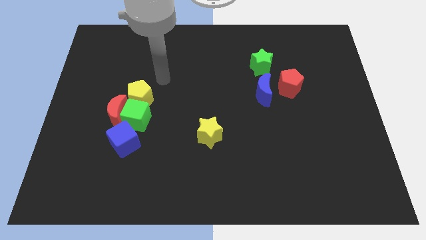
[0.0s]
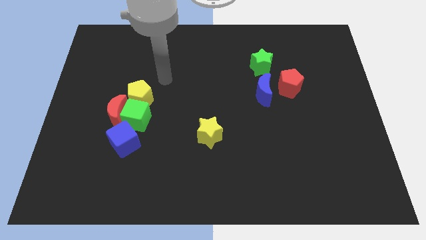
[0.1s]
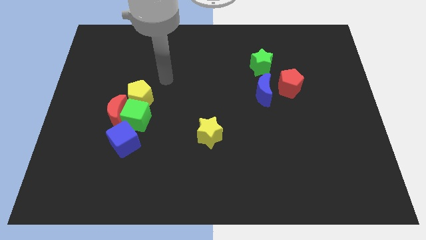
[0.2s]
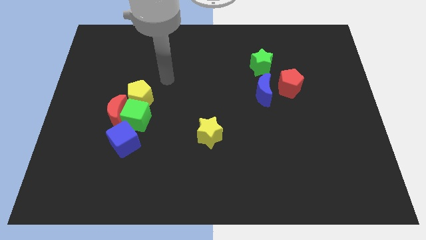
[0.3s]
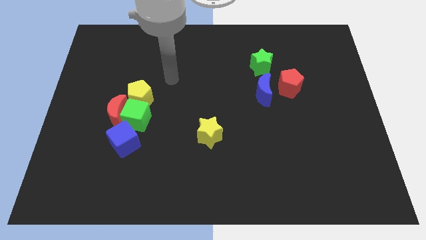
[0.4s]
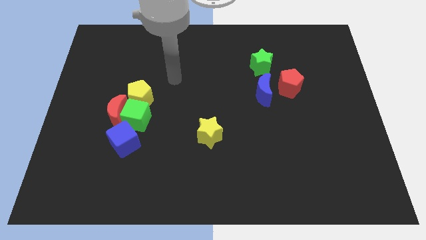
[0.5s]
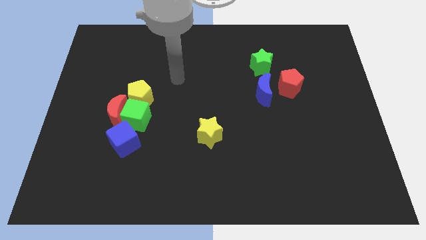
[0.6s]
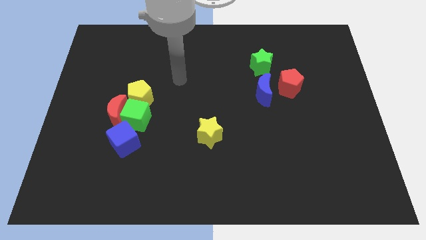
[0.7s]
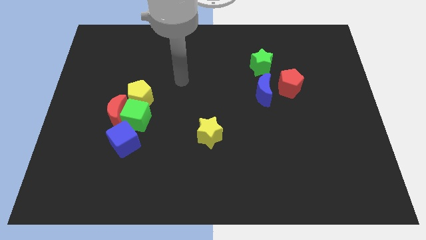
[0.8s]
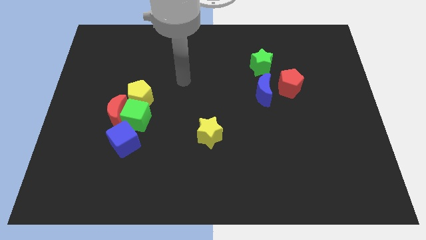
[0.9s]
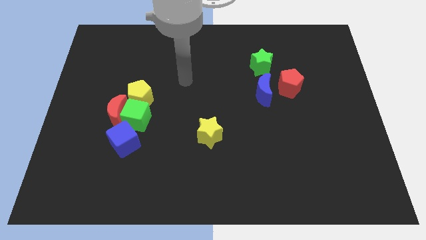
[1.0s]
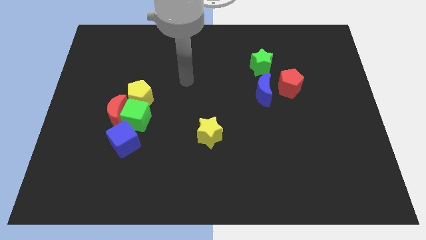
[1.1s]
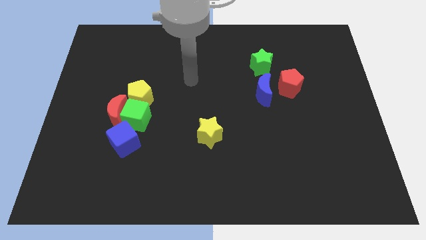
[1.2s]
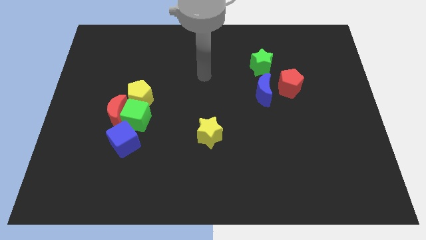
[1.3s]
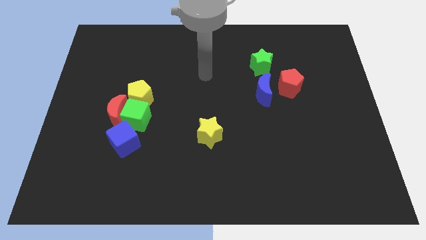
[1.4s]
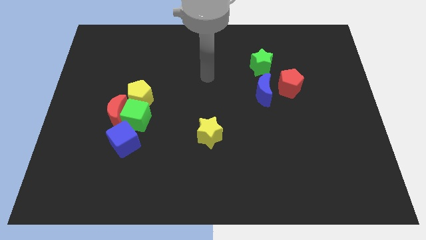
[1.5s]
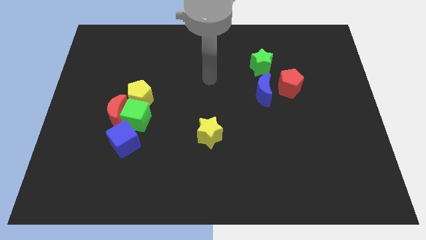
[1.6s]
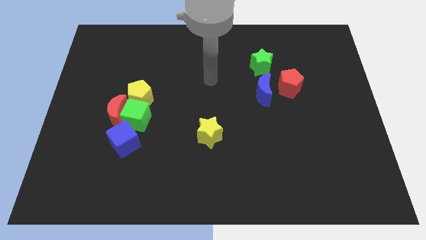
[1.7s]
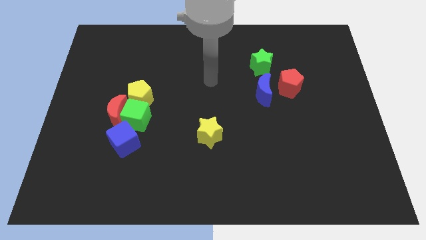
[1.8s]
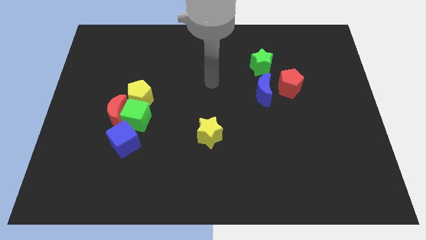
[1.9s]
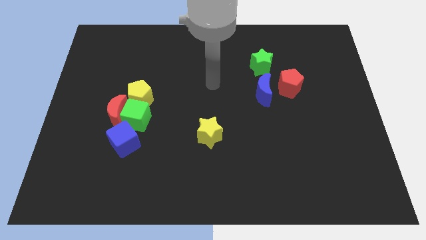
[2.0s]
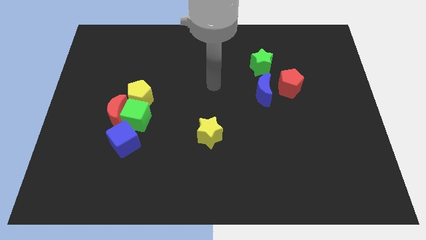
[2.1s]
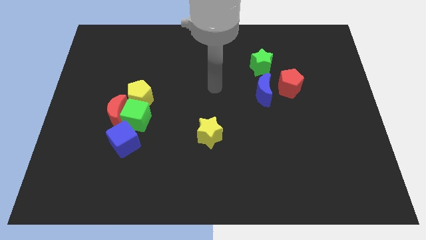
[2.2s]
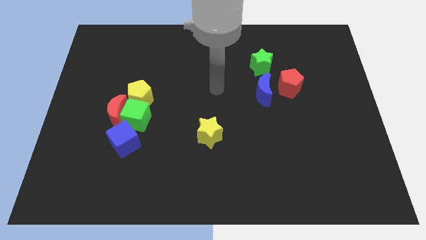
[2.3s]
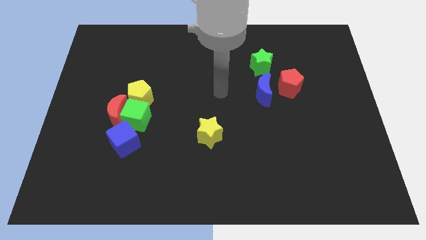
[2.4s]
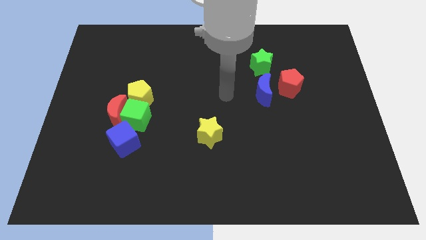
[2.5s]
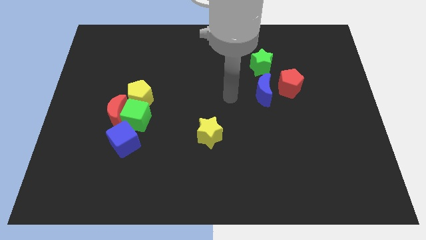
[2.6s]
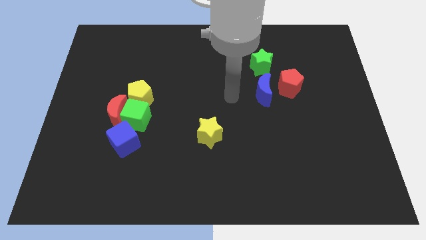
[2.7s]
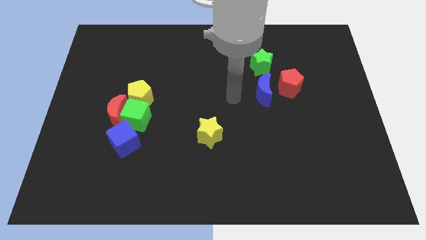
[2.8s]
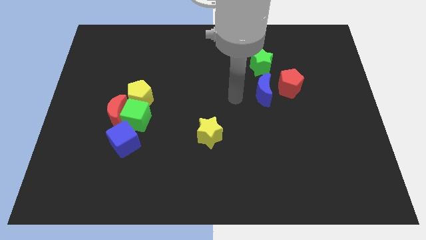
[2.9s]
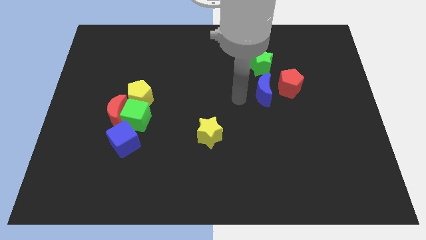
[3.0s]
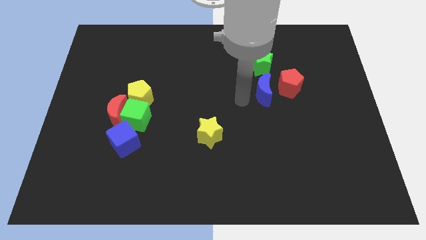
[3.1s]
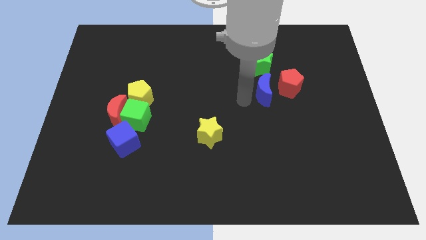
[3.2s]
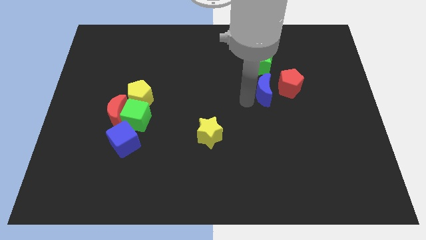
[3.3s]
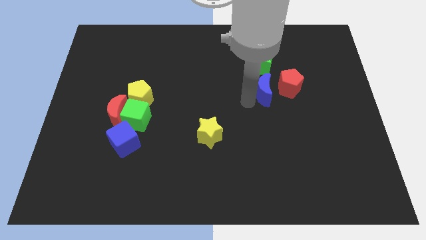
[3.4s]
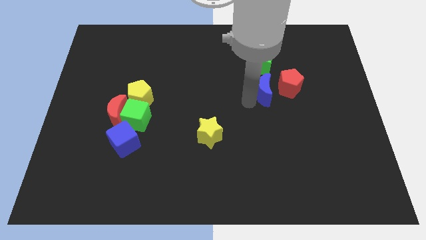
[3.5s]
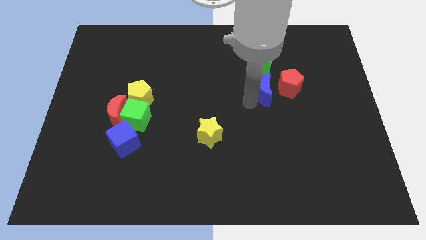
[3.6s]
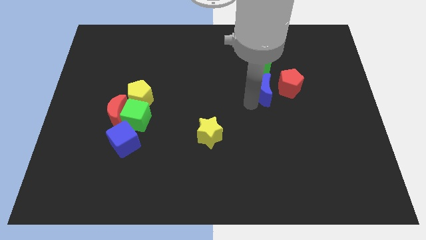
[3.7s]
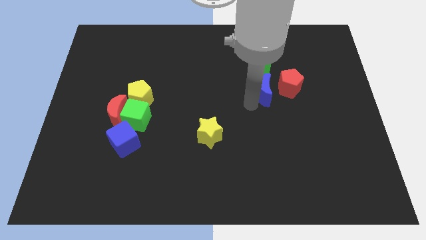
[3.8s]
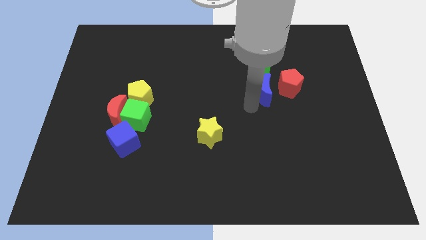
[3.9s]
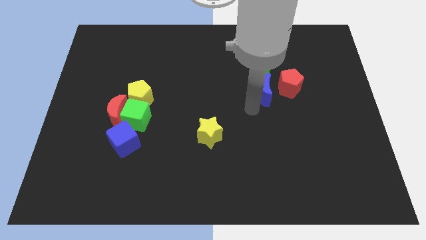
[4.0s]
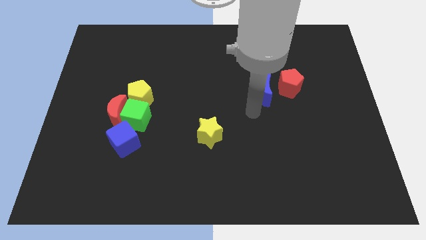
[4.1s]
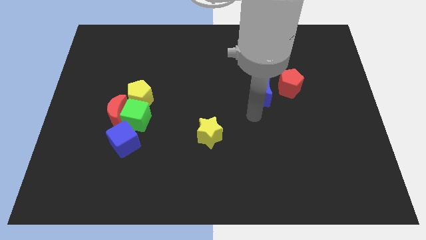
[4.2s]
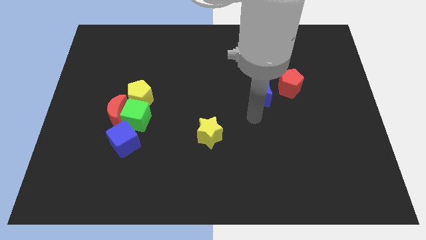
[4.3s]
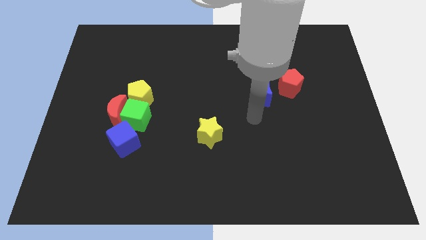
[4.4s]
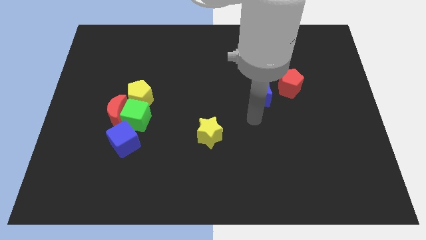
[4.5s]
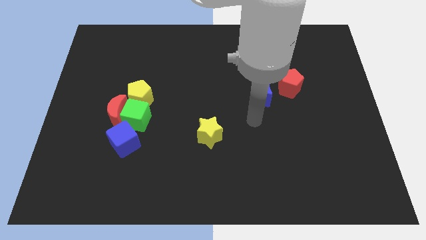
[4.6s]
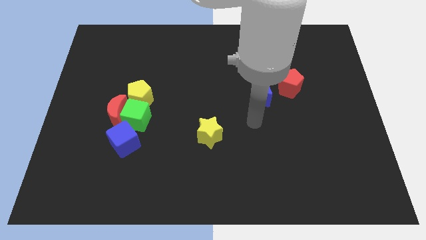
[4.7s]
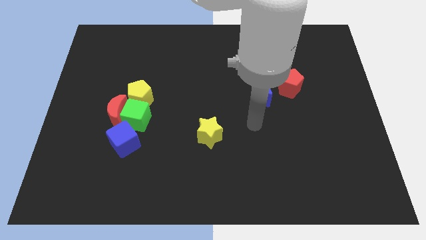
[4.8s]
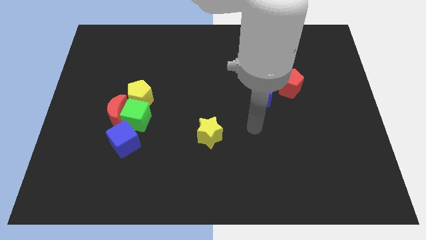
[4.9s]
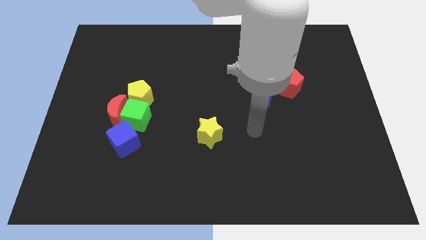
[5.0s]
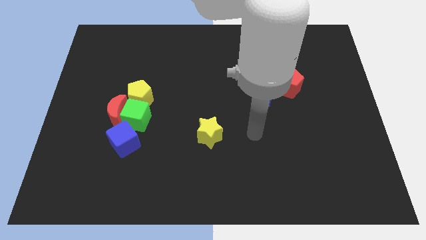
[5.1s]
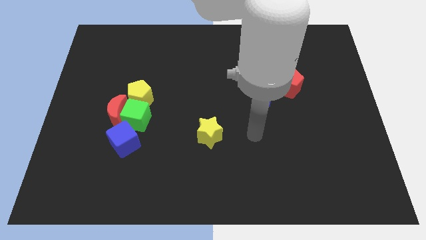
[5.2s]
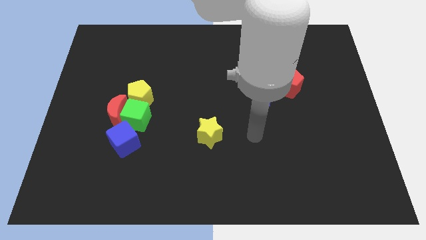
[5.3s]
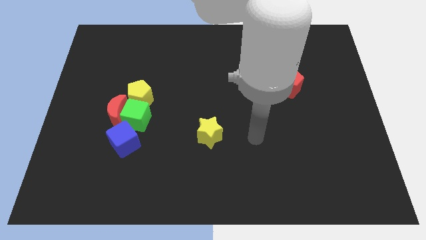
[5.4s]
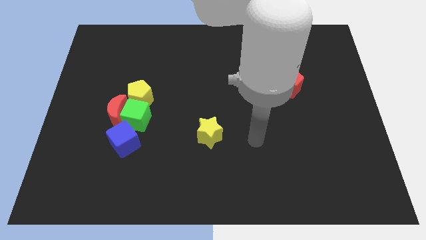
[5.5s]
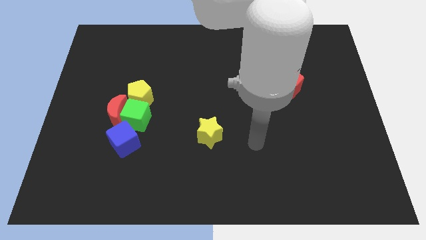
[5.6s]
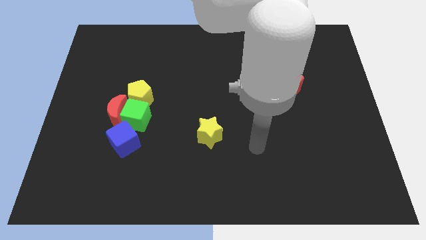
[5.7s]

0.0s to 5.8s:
place your arm to the right of the yellow star

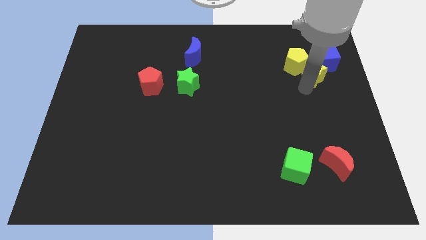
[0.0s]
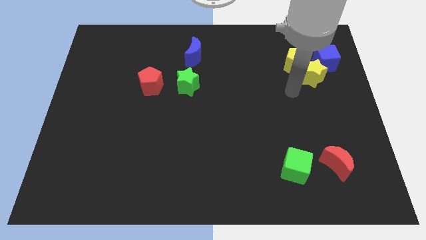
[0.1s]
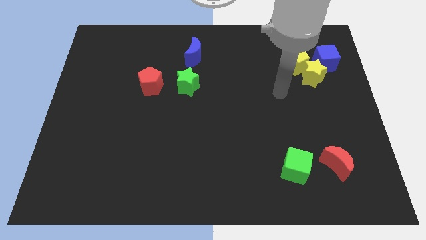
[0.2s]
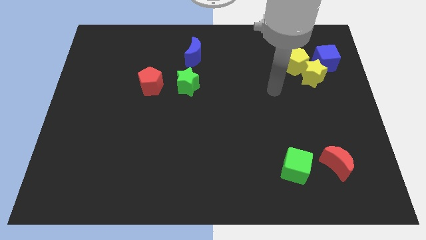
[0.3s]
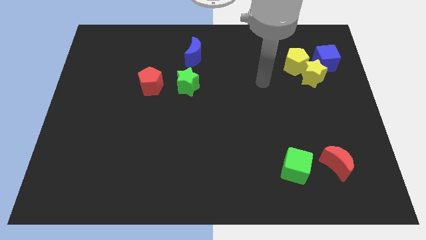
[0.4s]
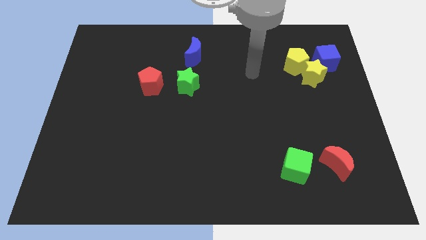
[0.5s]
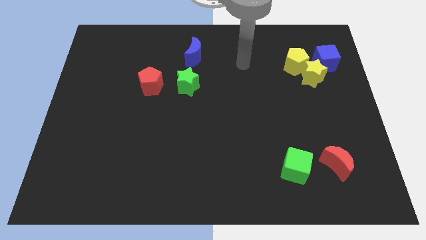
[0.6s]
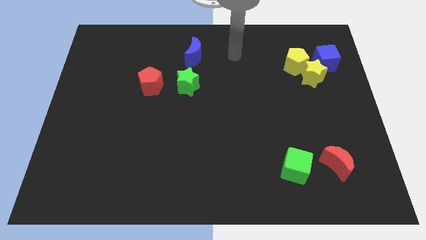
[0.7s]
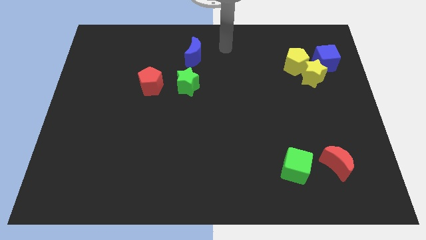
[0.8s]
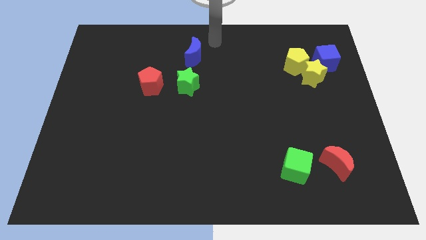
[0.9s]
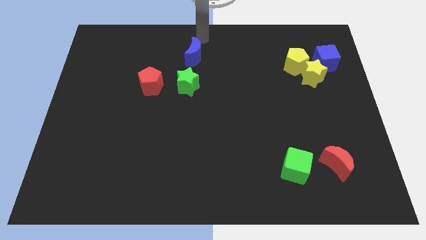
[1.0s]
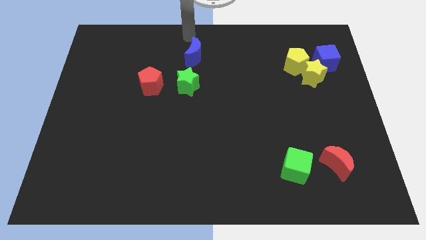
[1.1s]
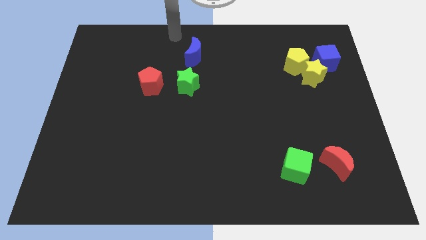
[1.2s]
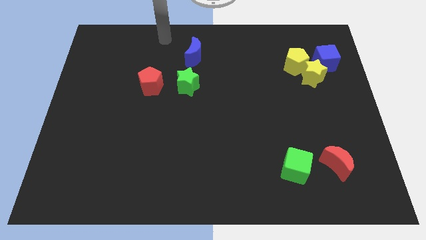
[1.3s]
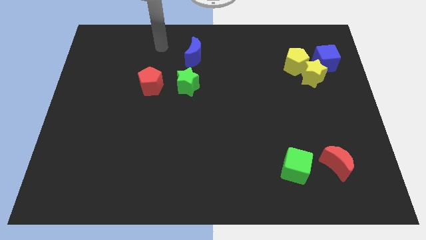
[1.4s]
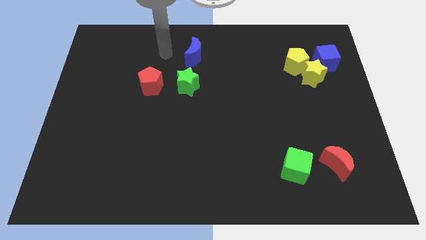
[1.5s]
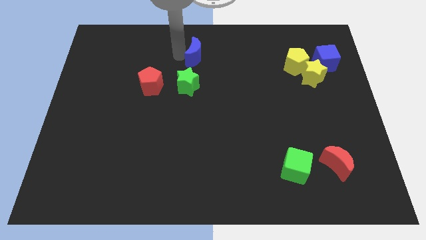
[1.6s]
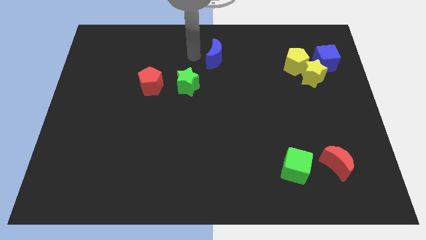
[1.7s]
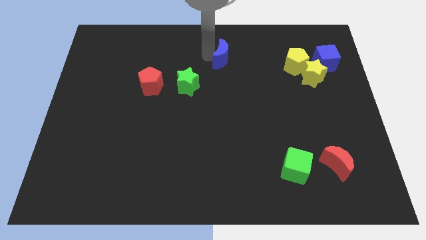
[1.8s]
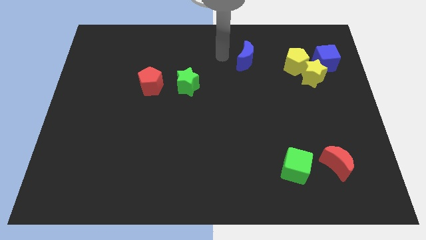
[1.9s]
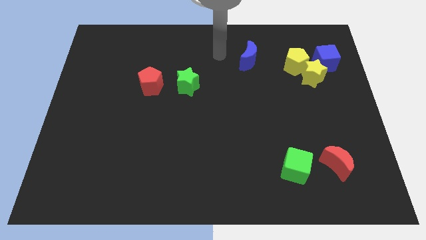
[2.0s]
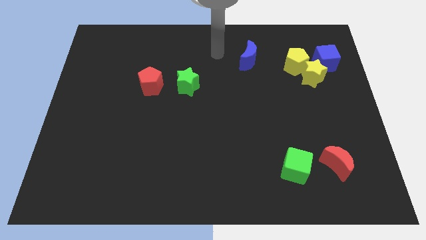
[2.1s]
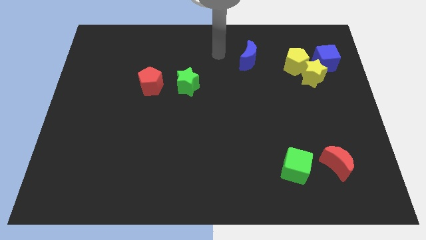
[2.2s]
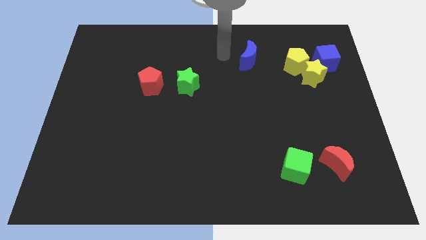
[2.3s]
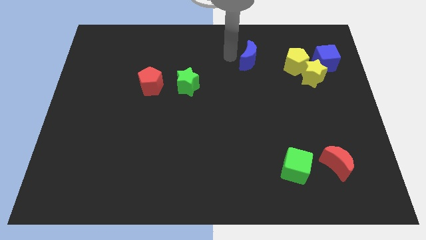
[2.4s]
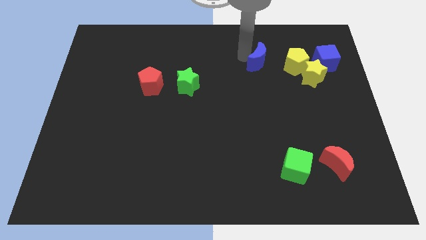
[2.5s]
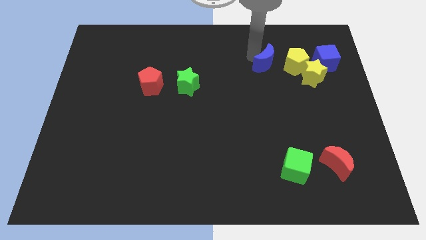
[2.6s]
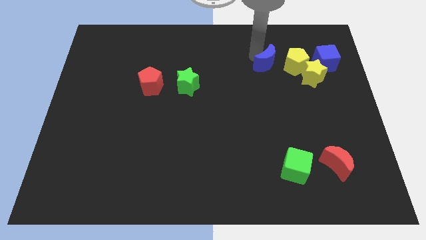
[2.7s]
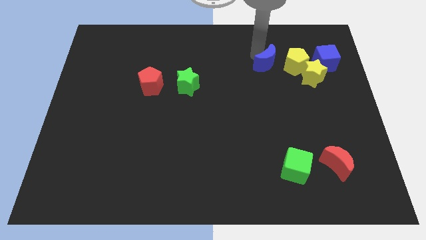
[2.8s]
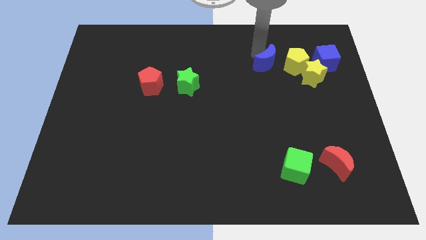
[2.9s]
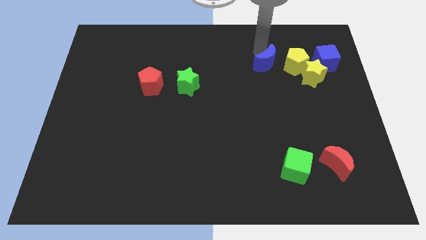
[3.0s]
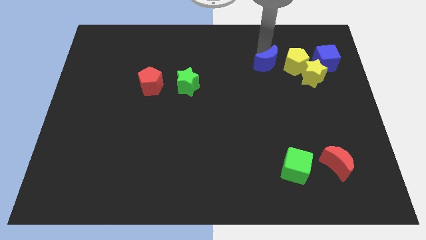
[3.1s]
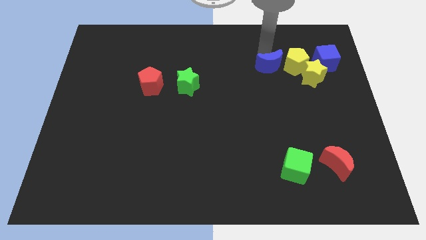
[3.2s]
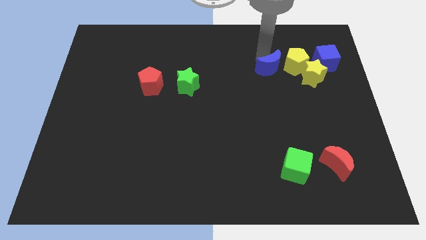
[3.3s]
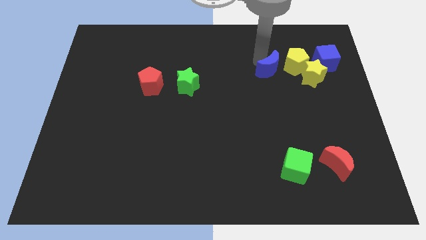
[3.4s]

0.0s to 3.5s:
move the blue crescent to the left of the yellow pentagon
